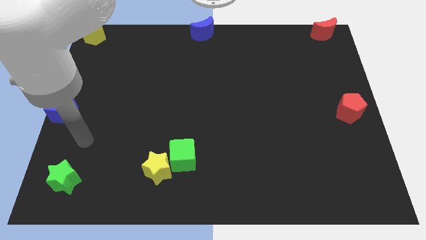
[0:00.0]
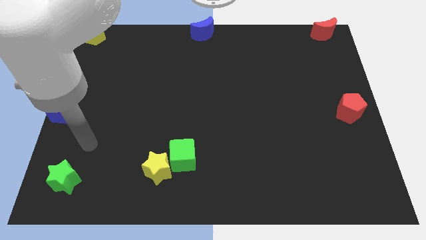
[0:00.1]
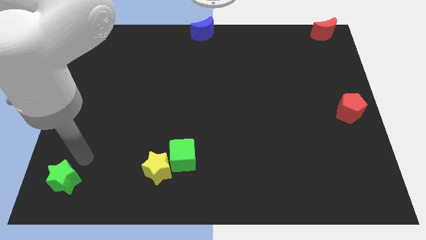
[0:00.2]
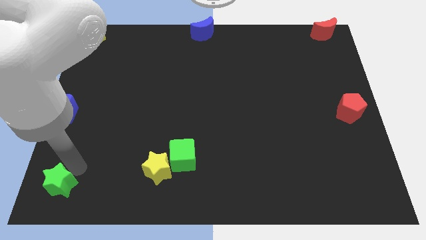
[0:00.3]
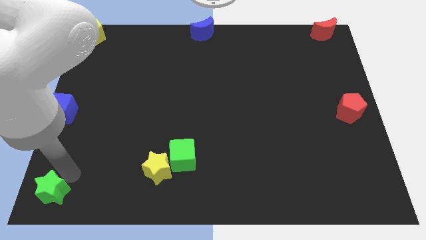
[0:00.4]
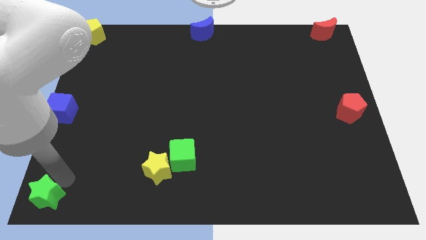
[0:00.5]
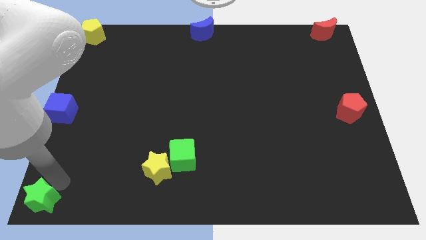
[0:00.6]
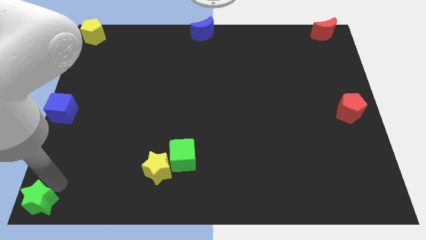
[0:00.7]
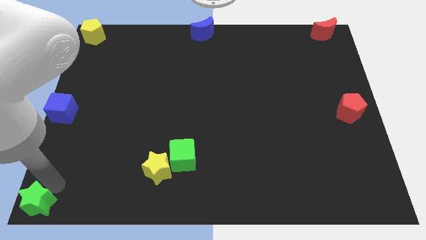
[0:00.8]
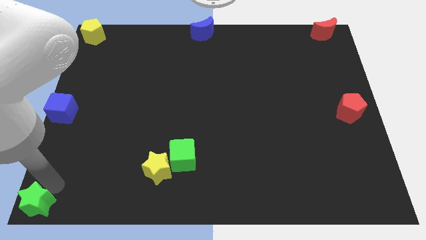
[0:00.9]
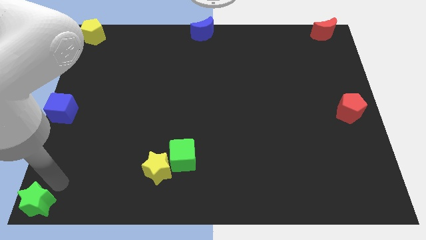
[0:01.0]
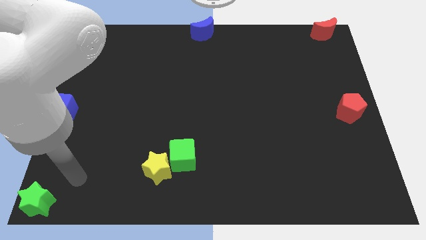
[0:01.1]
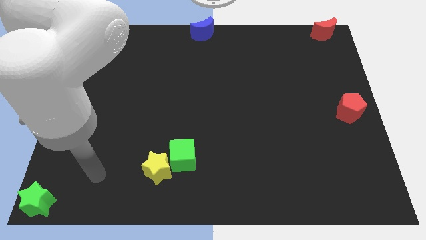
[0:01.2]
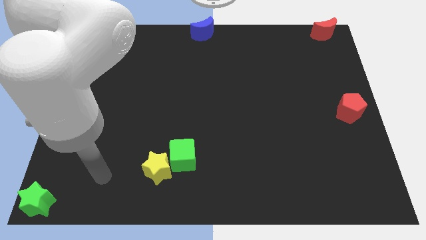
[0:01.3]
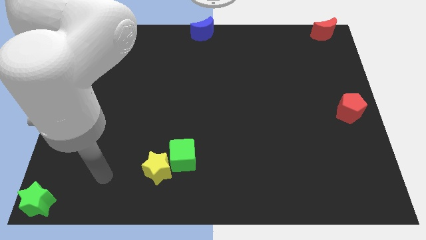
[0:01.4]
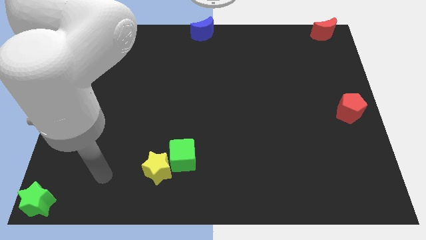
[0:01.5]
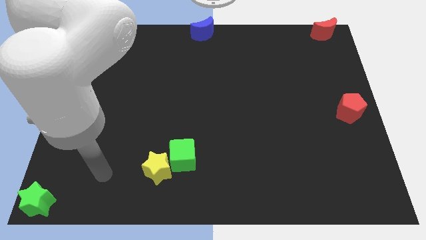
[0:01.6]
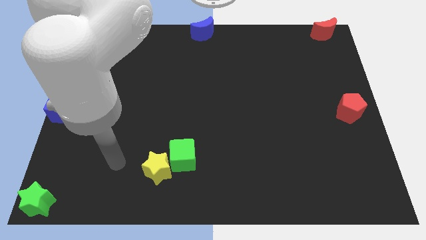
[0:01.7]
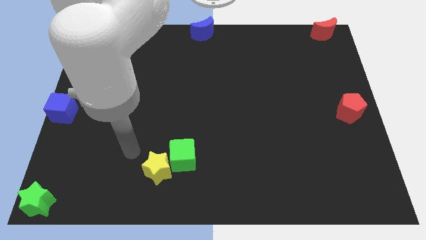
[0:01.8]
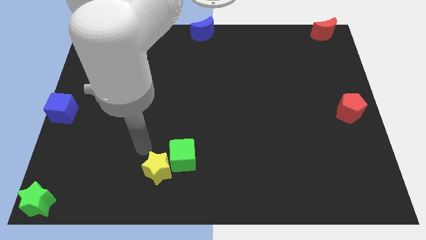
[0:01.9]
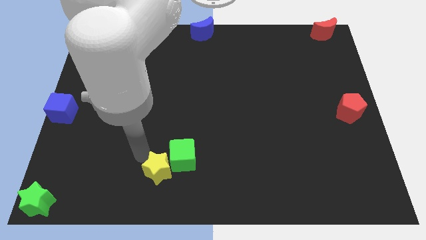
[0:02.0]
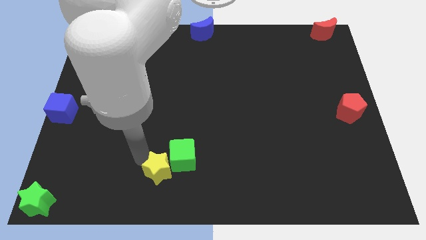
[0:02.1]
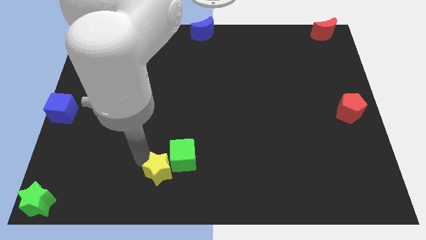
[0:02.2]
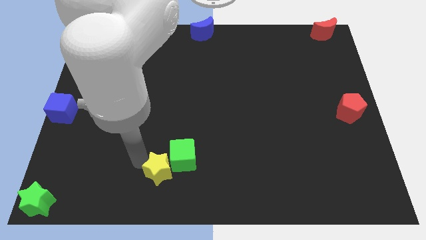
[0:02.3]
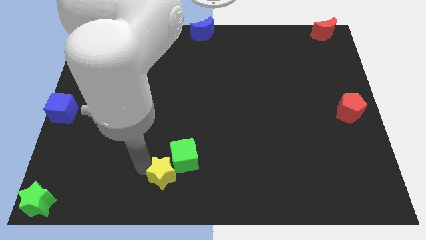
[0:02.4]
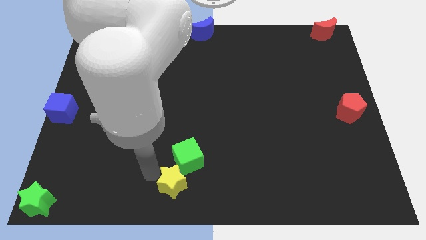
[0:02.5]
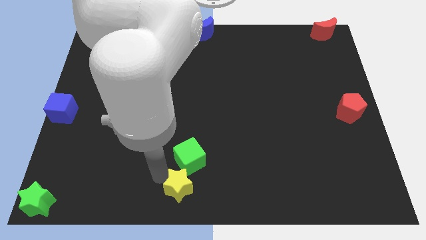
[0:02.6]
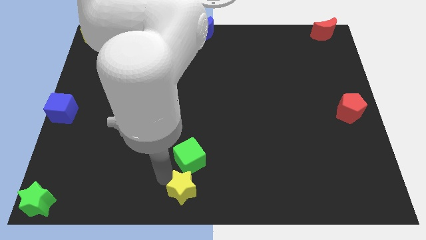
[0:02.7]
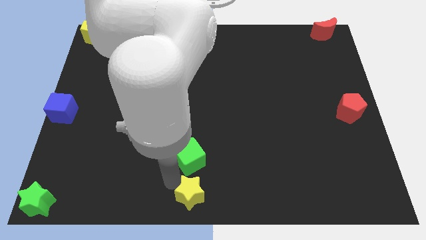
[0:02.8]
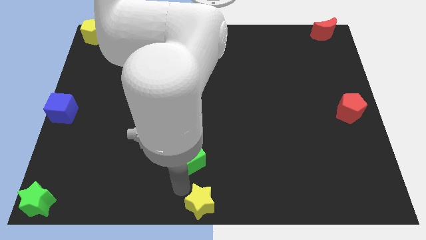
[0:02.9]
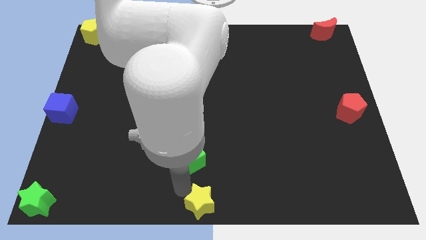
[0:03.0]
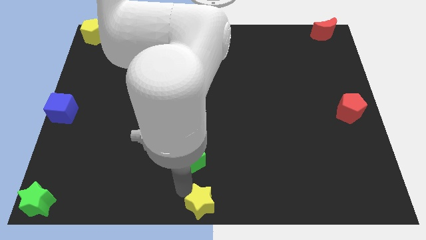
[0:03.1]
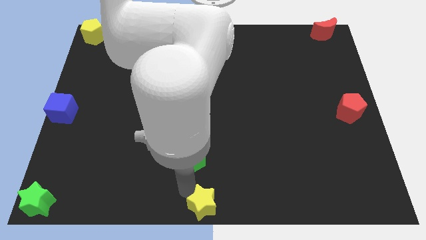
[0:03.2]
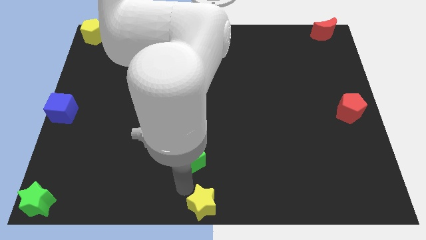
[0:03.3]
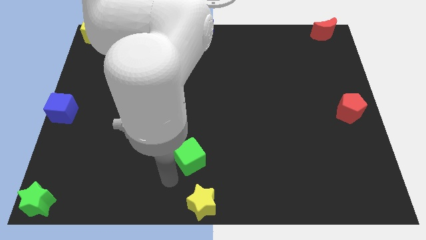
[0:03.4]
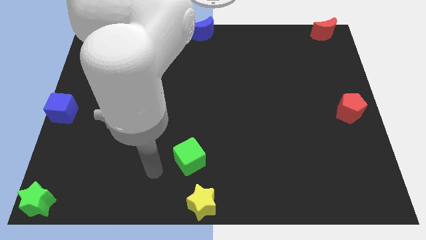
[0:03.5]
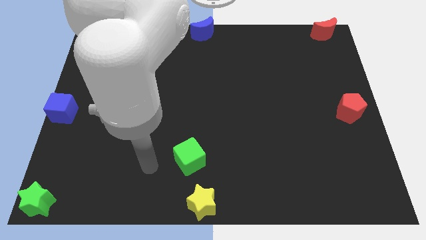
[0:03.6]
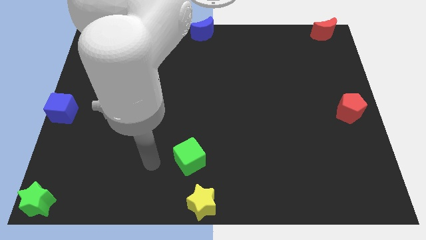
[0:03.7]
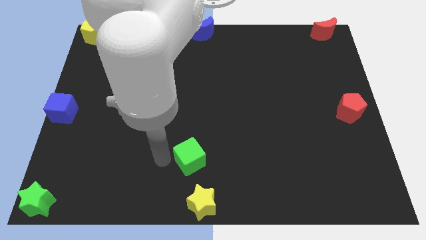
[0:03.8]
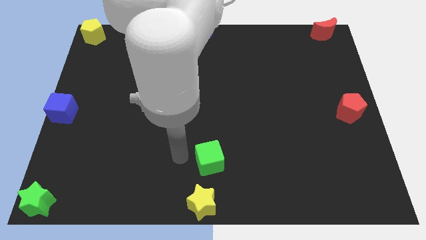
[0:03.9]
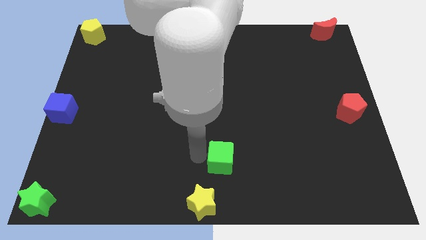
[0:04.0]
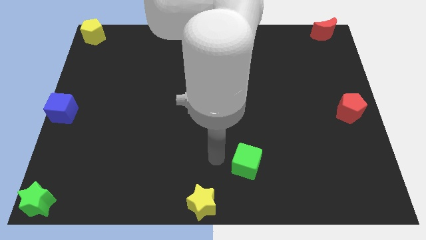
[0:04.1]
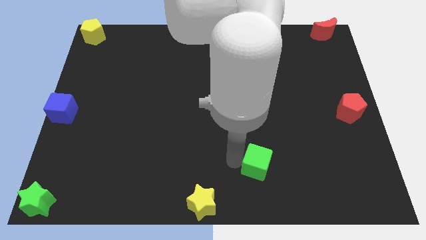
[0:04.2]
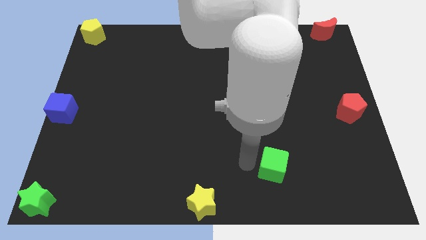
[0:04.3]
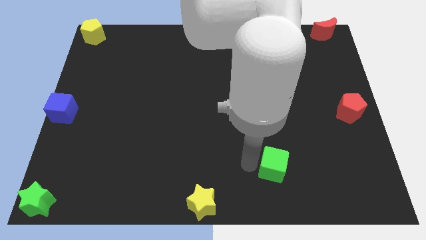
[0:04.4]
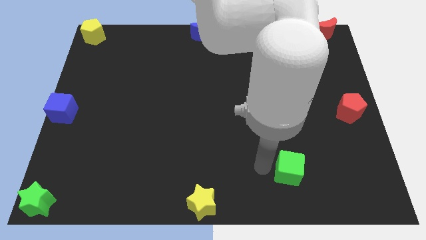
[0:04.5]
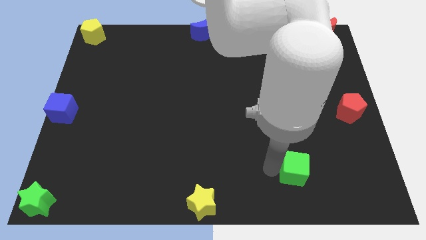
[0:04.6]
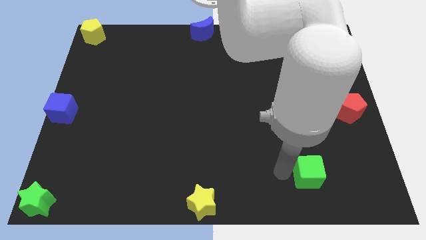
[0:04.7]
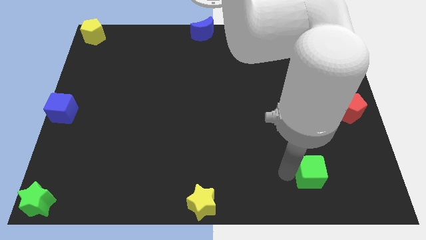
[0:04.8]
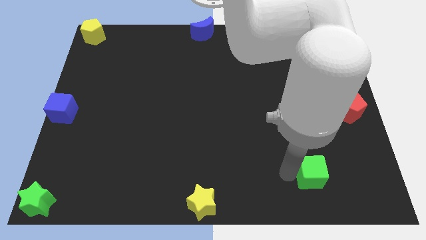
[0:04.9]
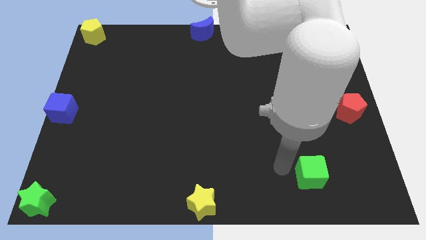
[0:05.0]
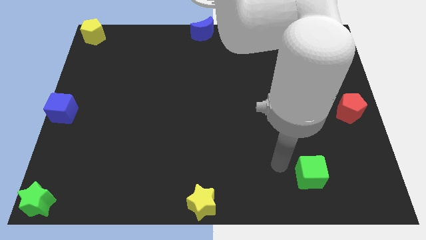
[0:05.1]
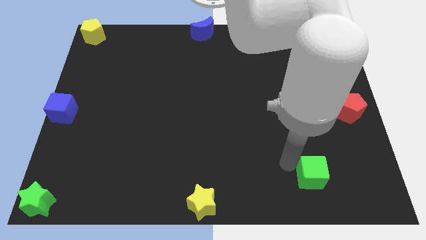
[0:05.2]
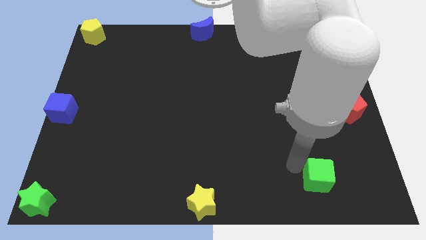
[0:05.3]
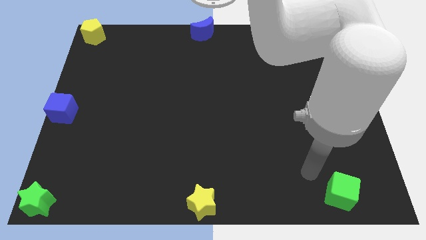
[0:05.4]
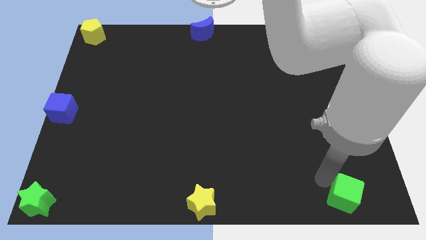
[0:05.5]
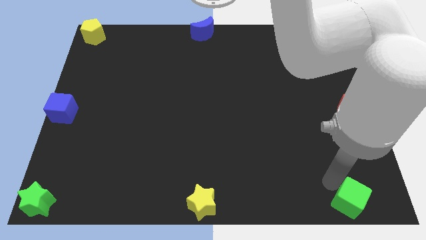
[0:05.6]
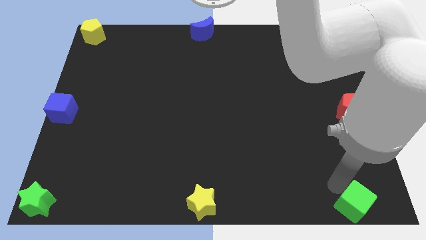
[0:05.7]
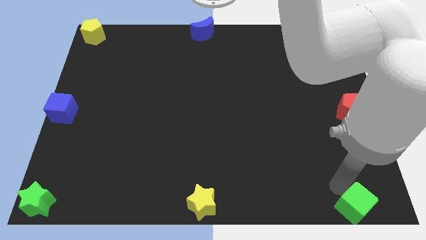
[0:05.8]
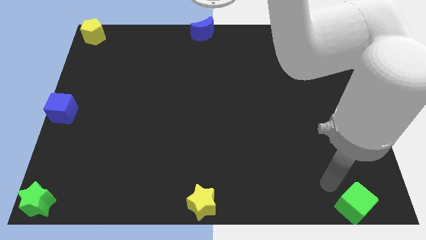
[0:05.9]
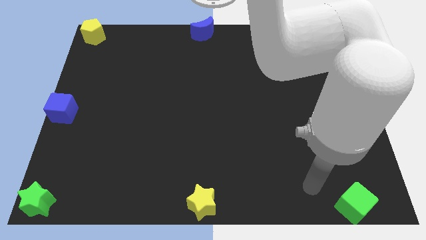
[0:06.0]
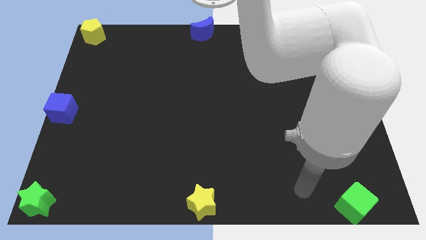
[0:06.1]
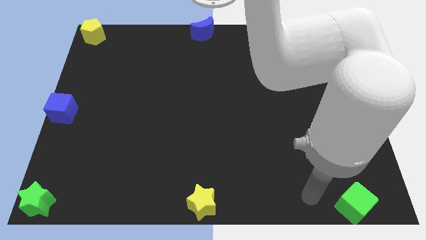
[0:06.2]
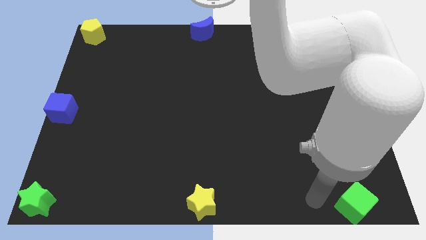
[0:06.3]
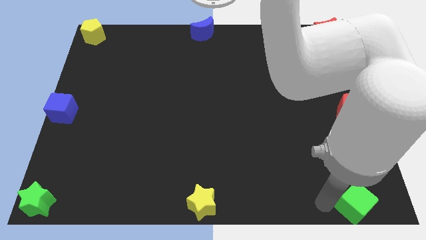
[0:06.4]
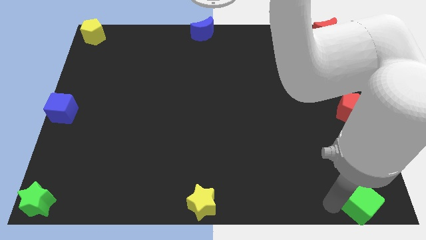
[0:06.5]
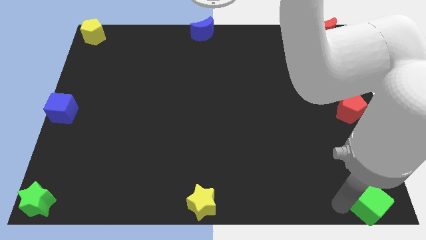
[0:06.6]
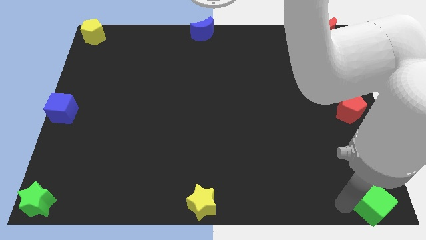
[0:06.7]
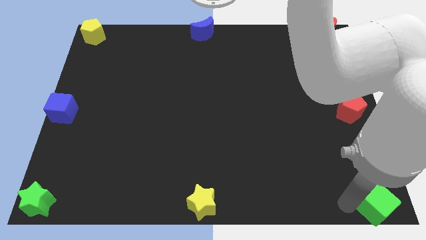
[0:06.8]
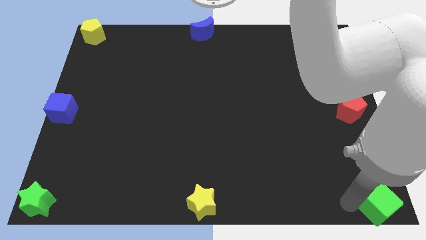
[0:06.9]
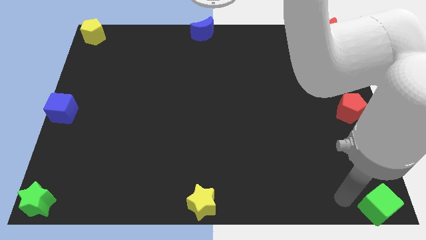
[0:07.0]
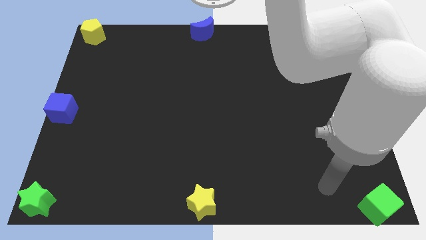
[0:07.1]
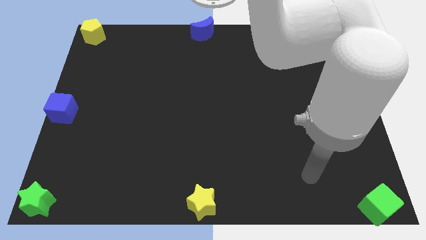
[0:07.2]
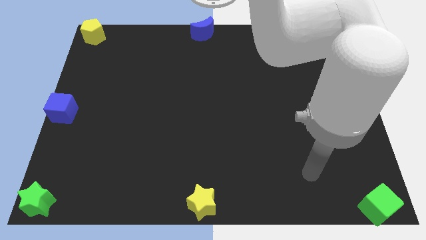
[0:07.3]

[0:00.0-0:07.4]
move the green star to bottom left corner of the board

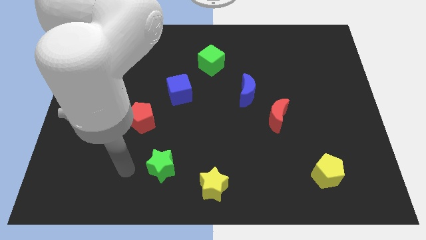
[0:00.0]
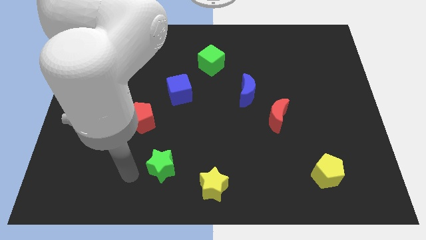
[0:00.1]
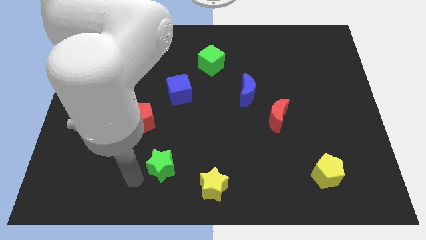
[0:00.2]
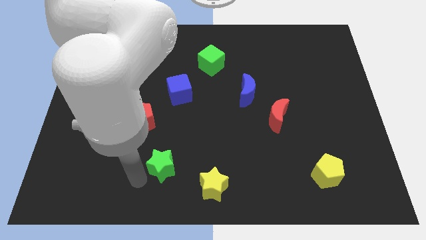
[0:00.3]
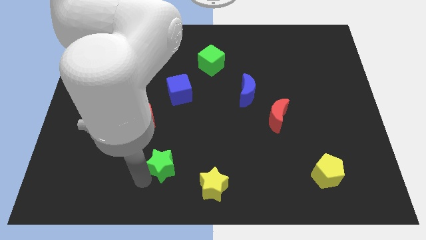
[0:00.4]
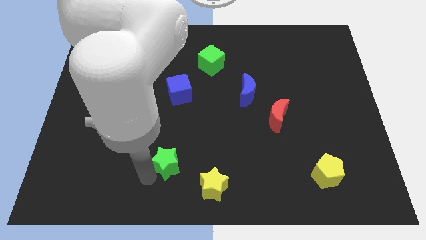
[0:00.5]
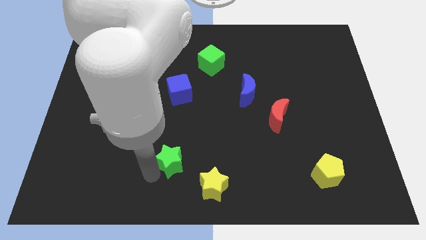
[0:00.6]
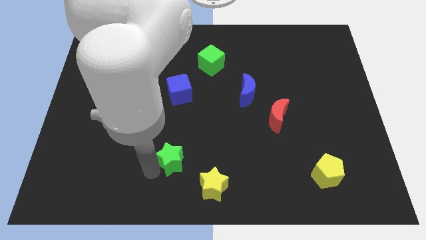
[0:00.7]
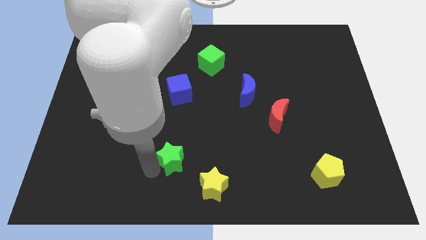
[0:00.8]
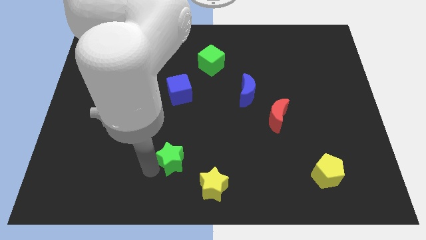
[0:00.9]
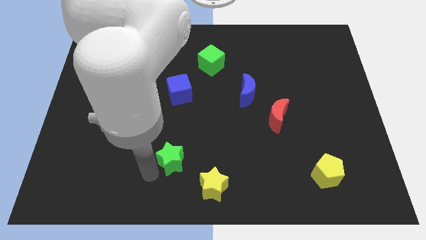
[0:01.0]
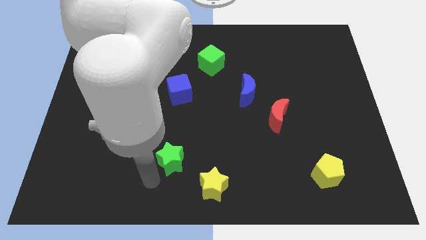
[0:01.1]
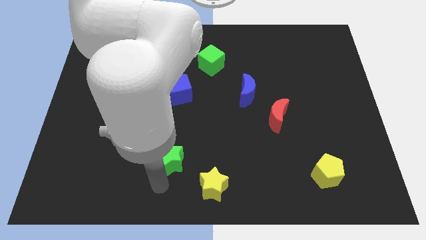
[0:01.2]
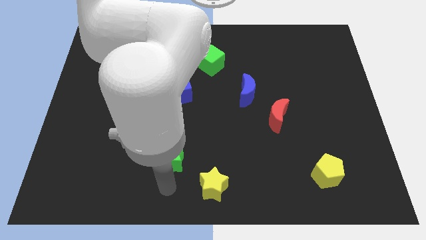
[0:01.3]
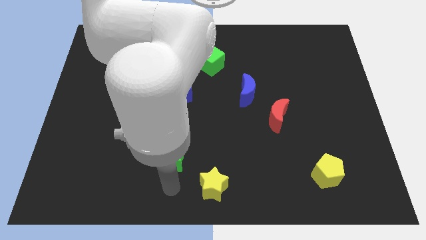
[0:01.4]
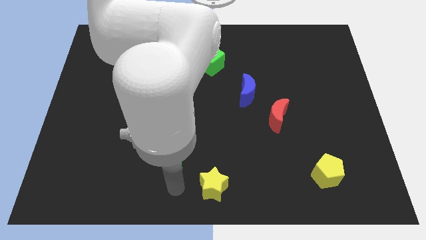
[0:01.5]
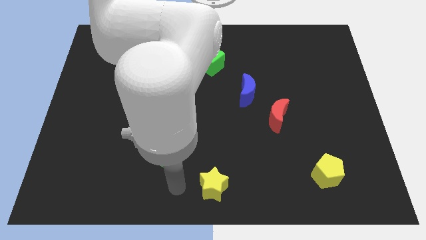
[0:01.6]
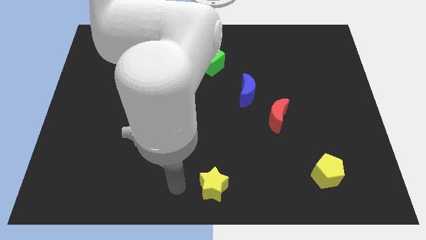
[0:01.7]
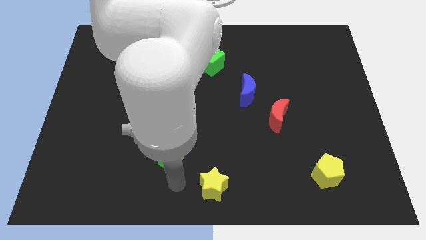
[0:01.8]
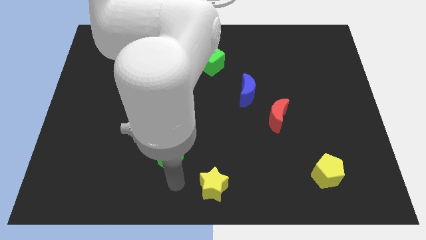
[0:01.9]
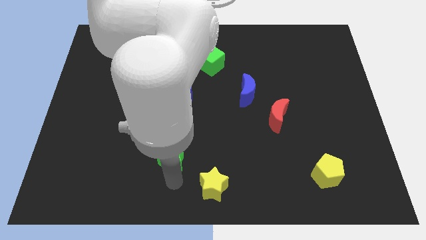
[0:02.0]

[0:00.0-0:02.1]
place the green star in between the red pentagon and yellow star
